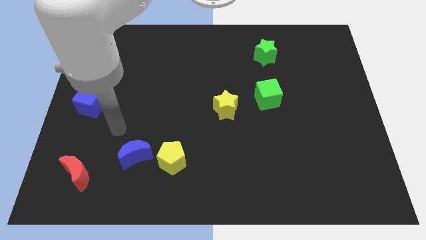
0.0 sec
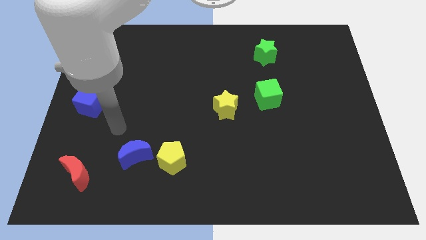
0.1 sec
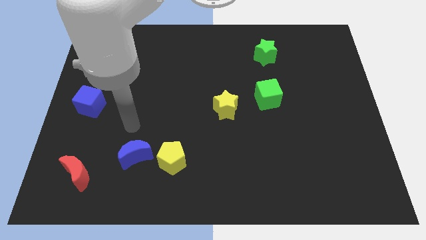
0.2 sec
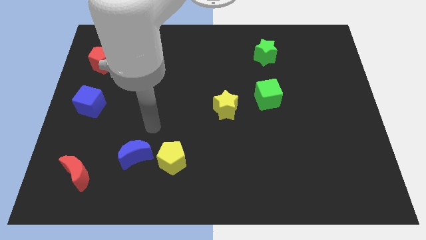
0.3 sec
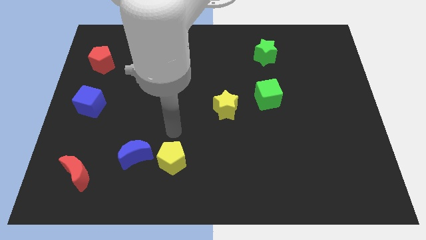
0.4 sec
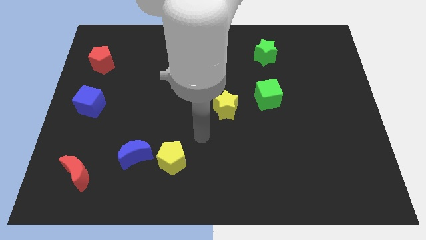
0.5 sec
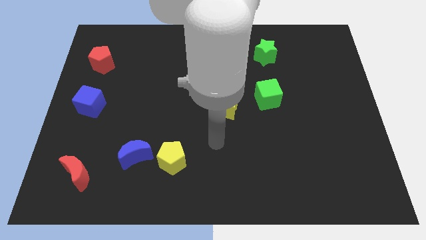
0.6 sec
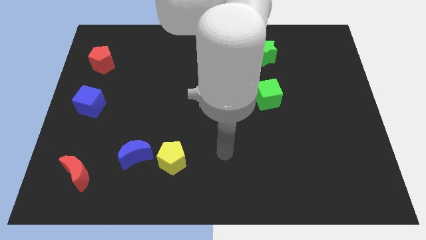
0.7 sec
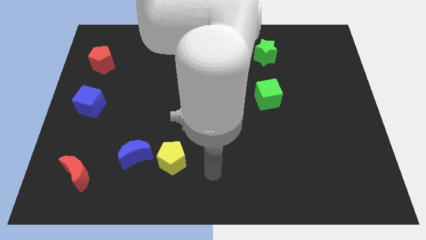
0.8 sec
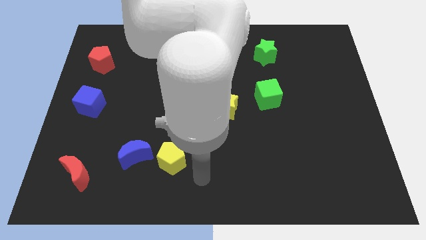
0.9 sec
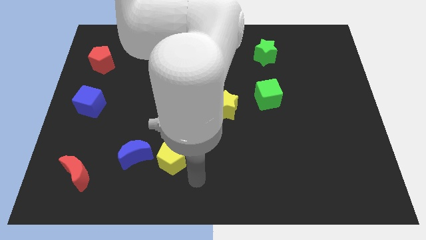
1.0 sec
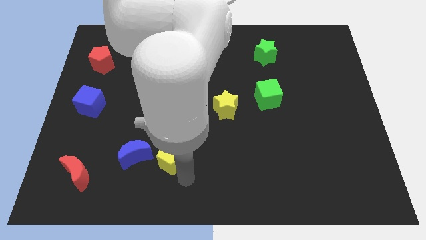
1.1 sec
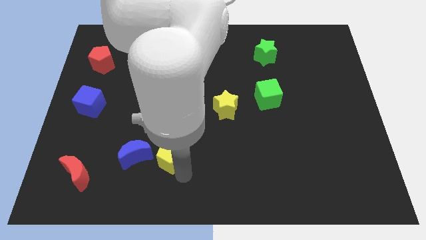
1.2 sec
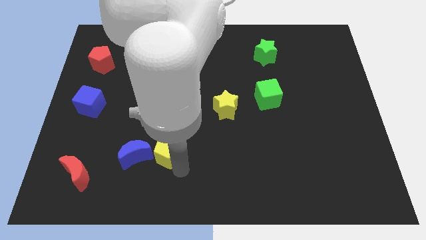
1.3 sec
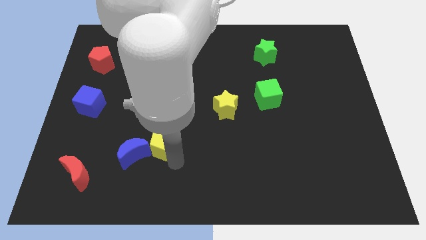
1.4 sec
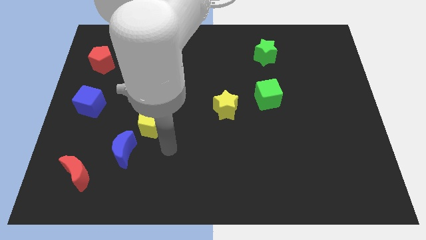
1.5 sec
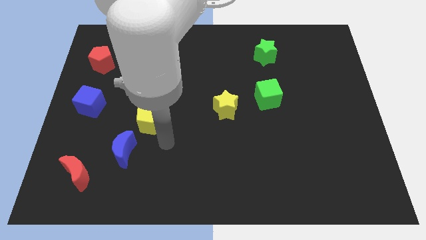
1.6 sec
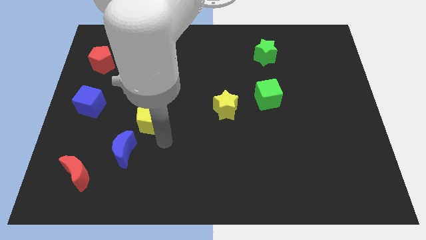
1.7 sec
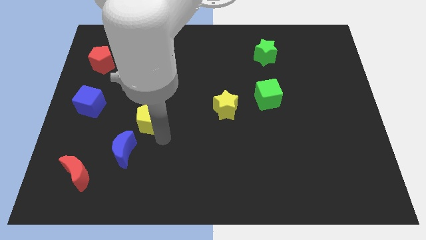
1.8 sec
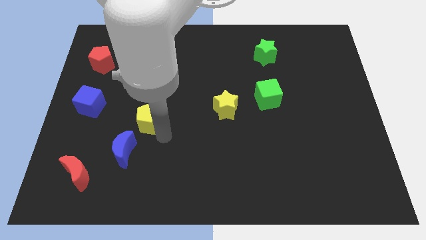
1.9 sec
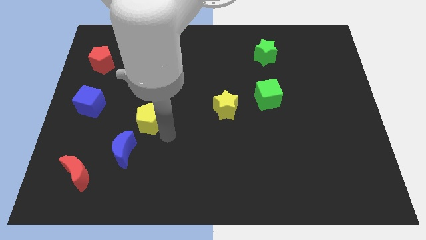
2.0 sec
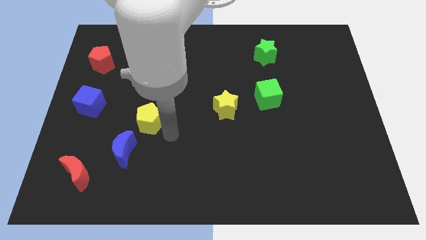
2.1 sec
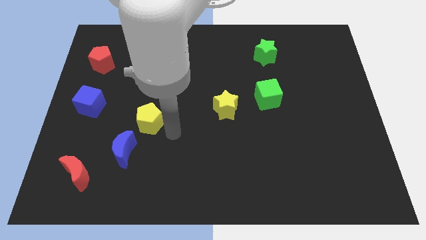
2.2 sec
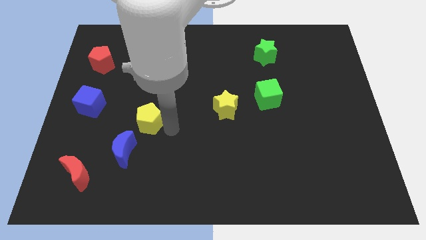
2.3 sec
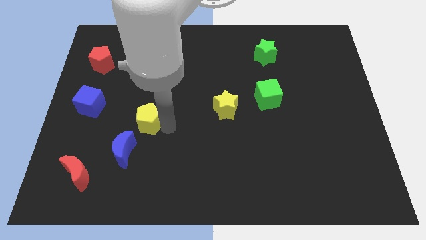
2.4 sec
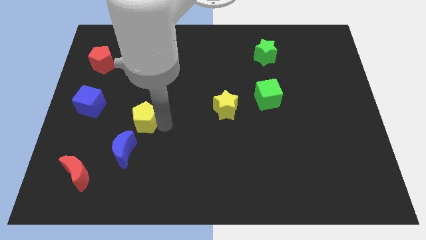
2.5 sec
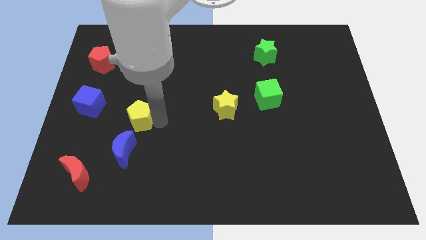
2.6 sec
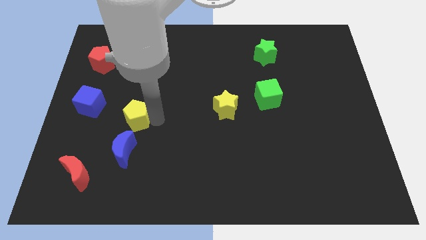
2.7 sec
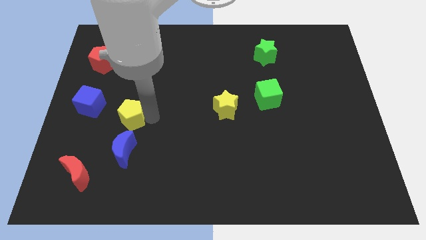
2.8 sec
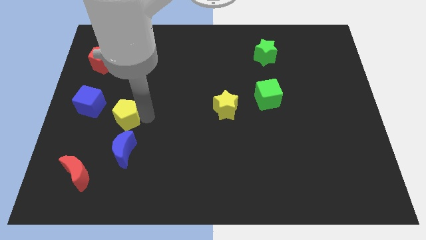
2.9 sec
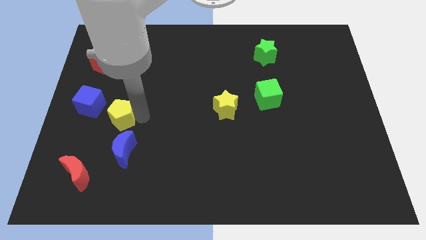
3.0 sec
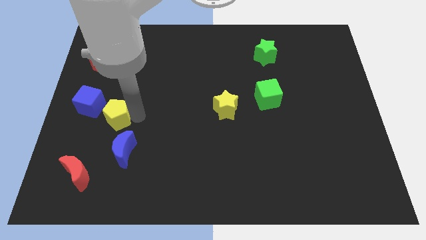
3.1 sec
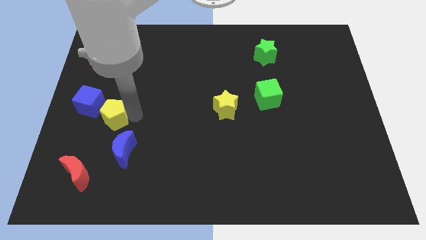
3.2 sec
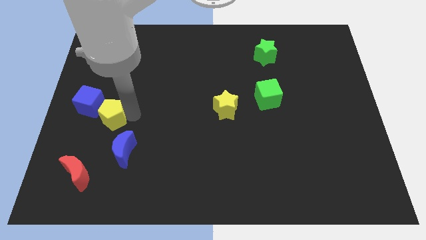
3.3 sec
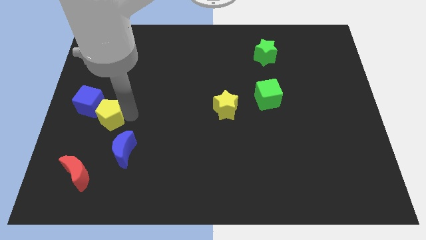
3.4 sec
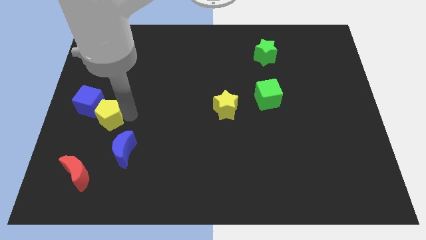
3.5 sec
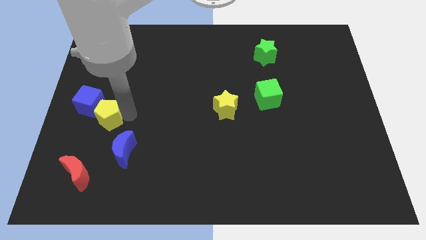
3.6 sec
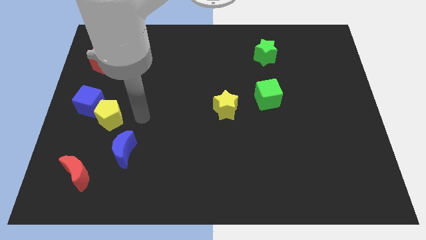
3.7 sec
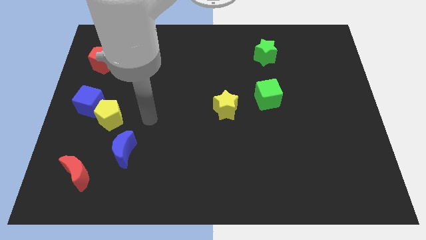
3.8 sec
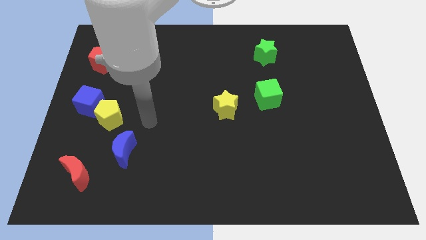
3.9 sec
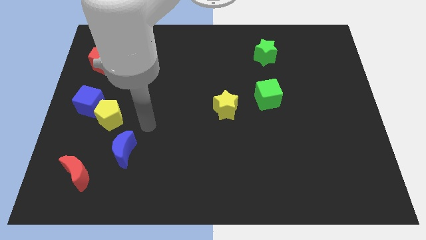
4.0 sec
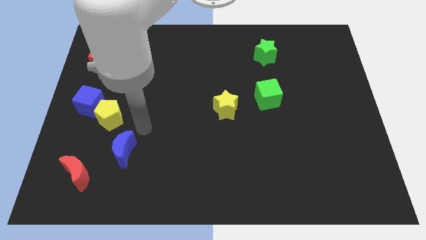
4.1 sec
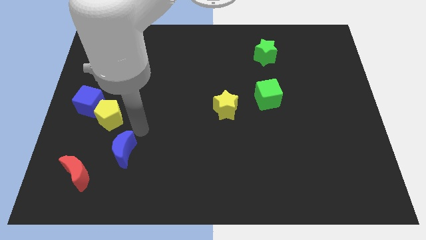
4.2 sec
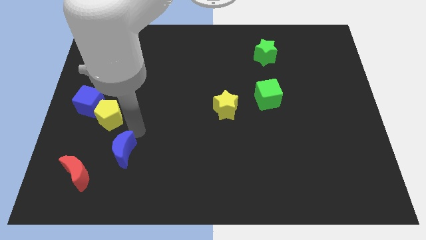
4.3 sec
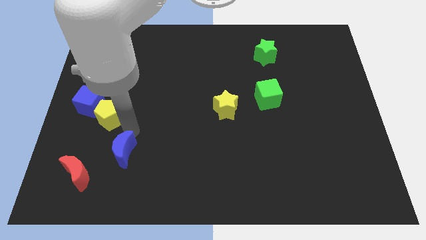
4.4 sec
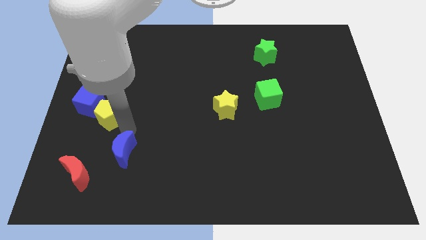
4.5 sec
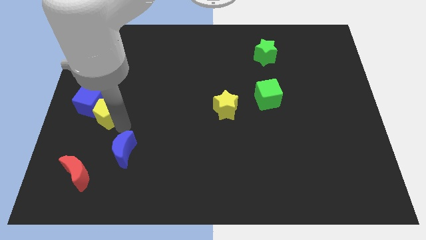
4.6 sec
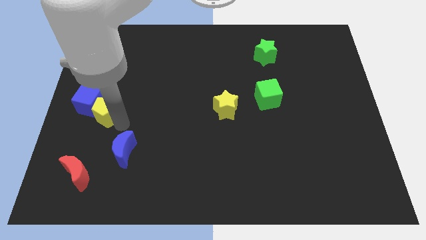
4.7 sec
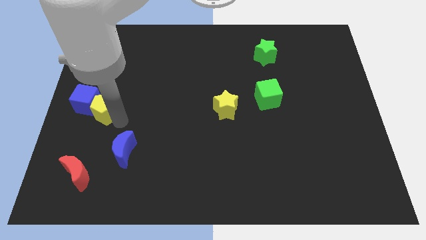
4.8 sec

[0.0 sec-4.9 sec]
slide the yellow pentagon to the blue cube

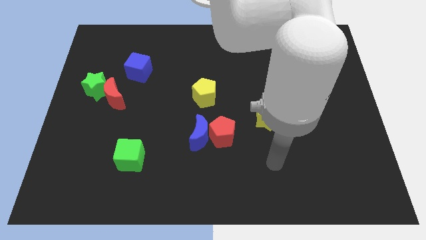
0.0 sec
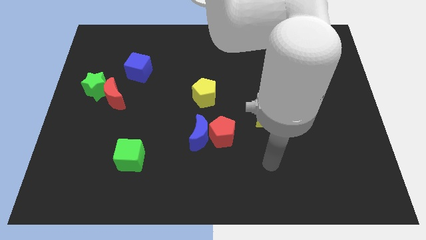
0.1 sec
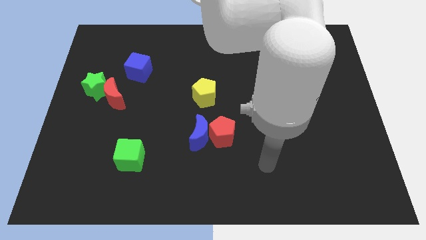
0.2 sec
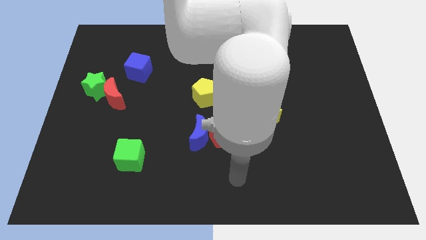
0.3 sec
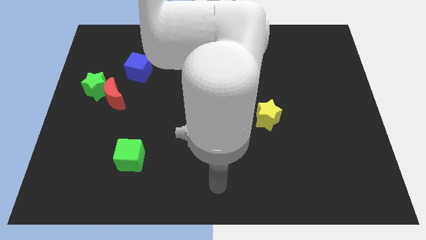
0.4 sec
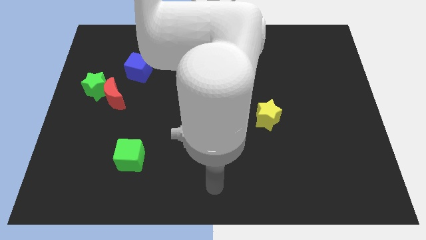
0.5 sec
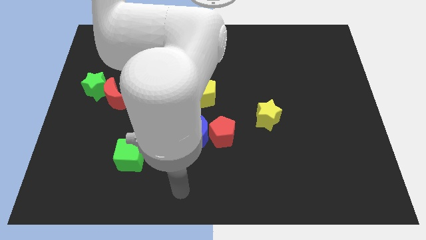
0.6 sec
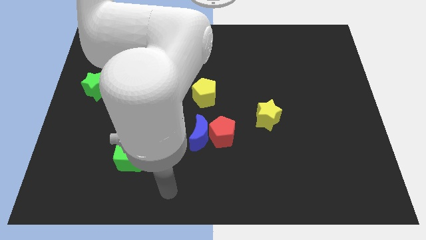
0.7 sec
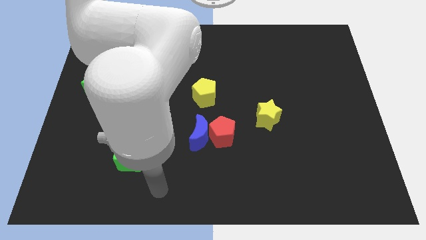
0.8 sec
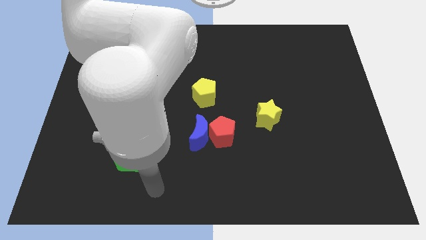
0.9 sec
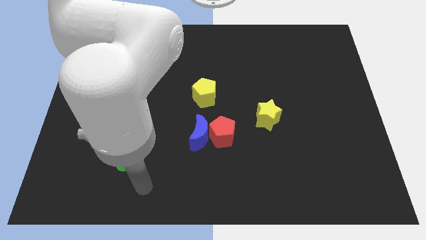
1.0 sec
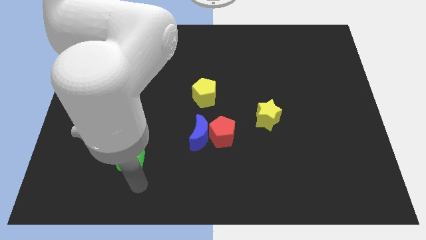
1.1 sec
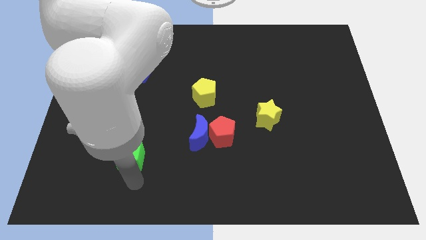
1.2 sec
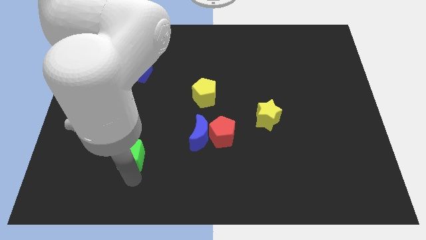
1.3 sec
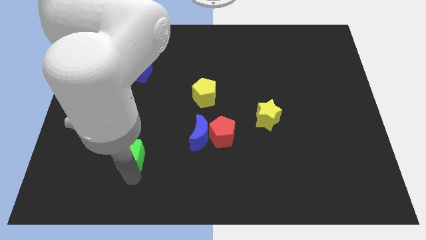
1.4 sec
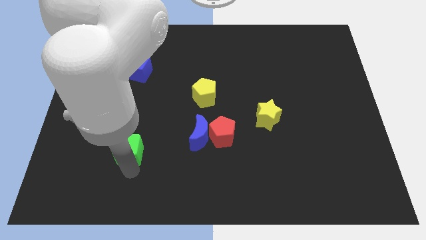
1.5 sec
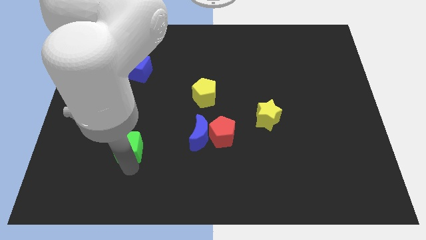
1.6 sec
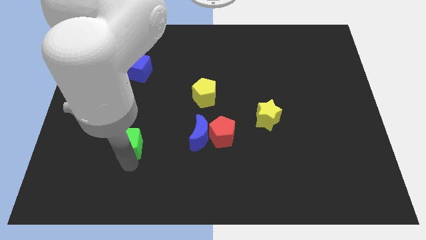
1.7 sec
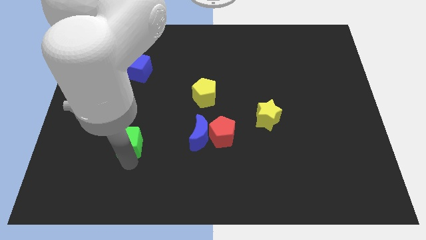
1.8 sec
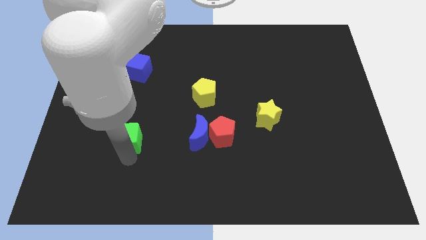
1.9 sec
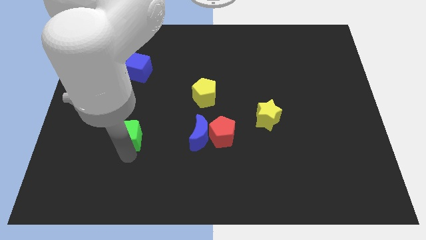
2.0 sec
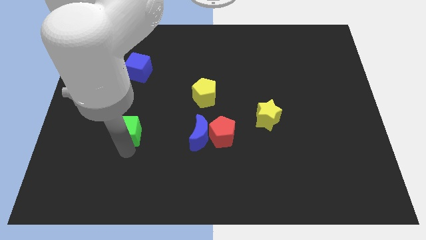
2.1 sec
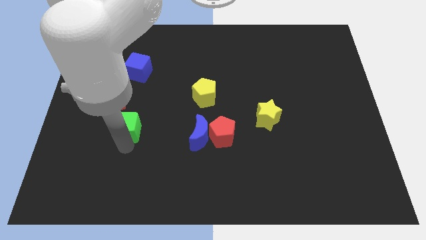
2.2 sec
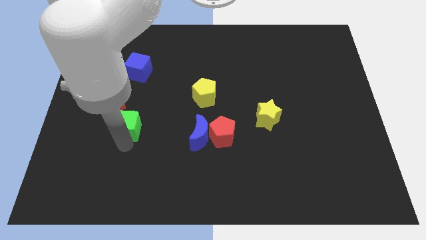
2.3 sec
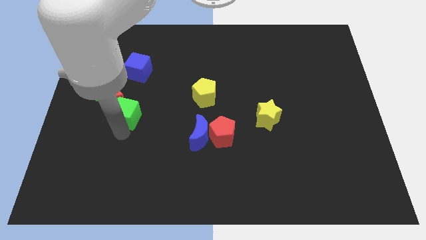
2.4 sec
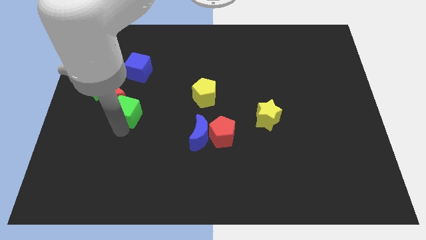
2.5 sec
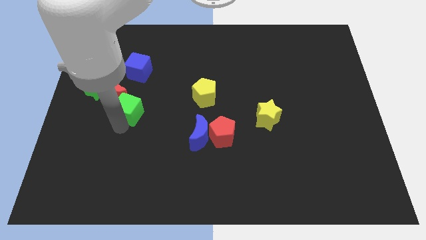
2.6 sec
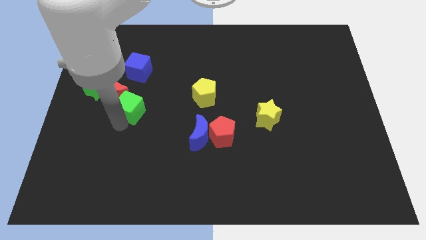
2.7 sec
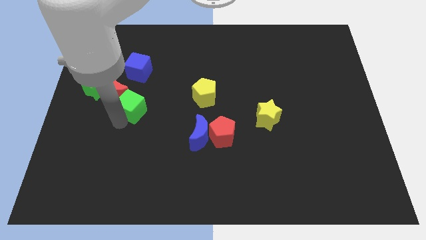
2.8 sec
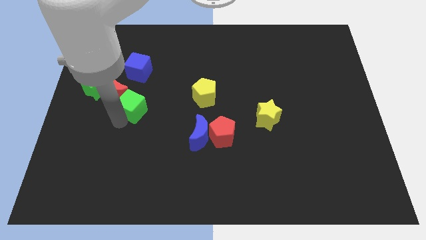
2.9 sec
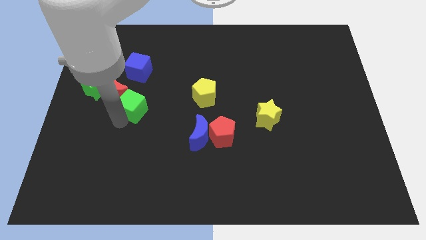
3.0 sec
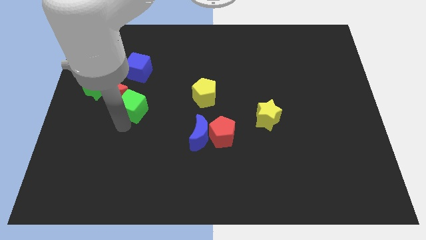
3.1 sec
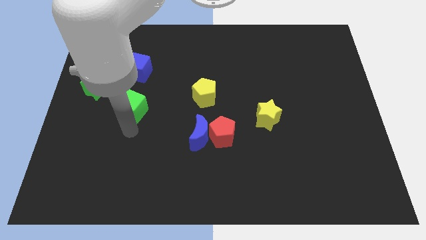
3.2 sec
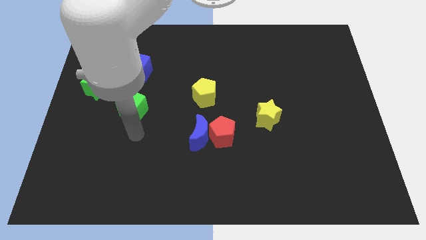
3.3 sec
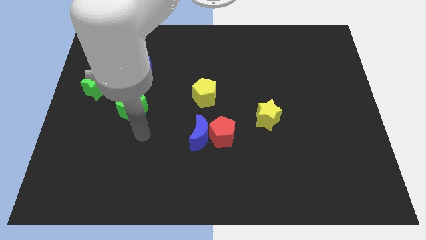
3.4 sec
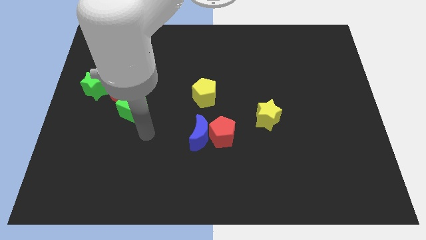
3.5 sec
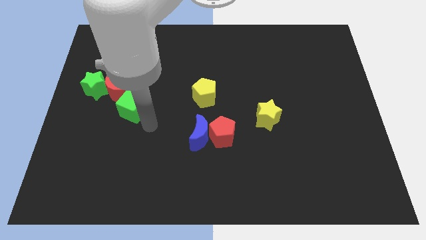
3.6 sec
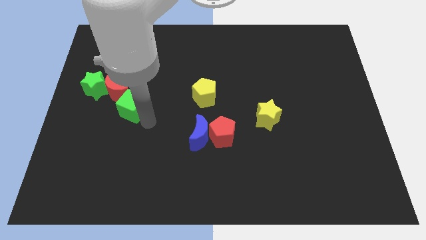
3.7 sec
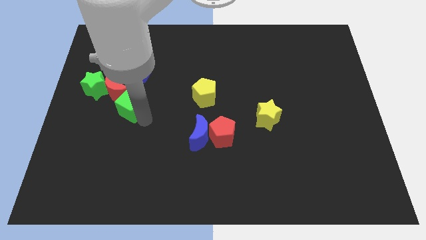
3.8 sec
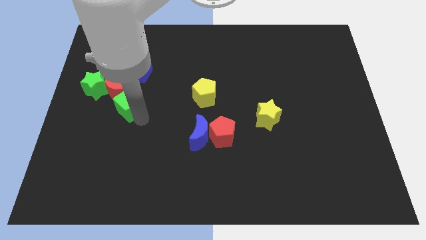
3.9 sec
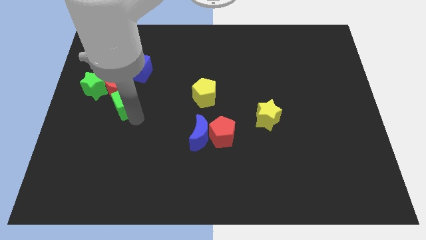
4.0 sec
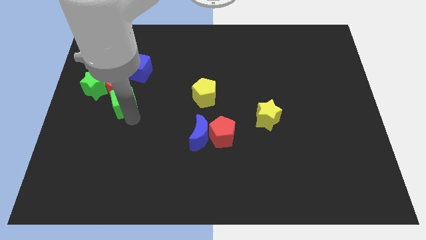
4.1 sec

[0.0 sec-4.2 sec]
push the green cube close to the red moon
